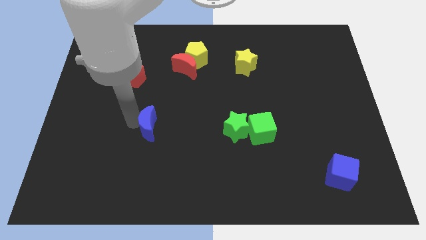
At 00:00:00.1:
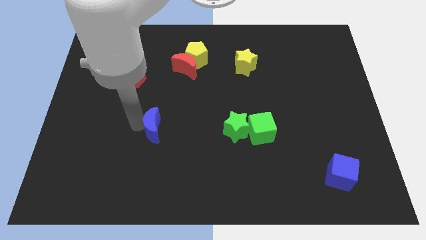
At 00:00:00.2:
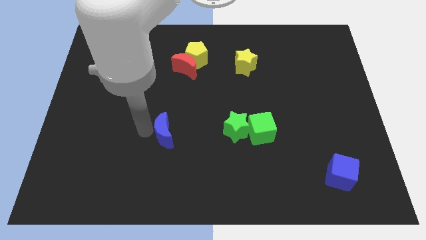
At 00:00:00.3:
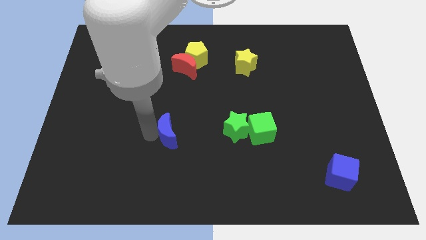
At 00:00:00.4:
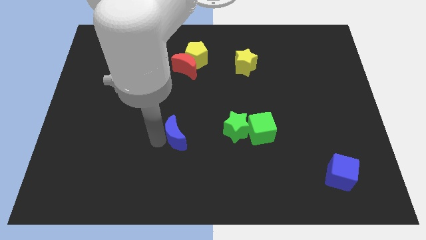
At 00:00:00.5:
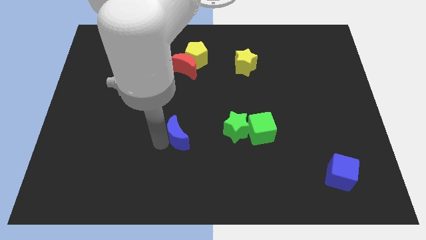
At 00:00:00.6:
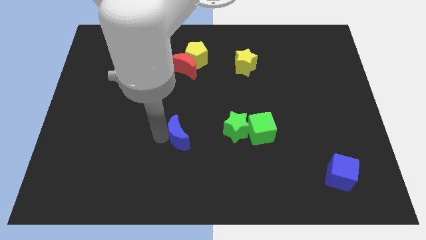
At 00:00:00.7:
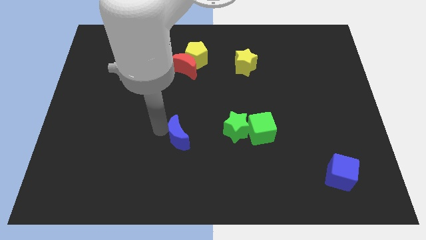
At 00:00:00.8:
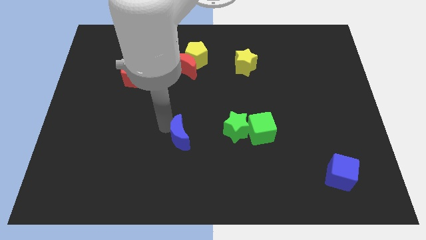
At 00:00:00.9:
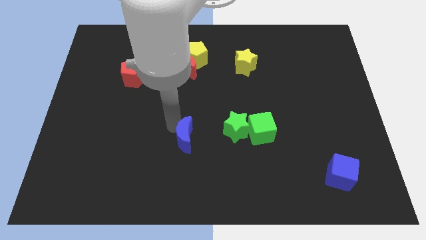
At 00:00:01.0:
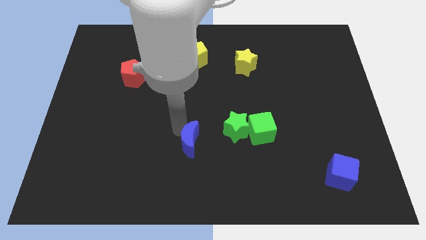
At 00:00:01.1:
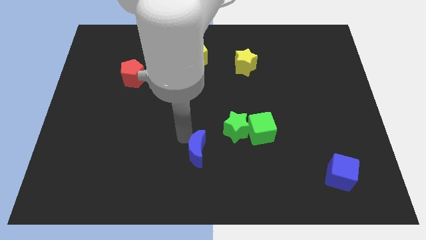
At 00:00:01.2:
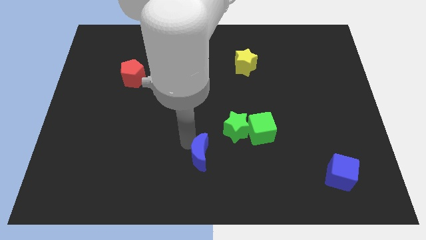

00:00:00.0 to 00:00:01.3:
place blue moon to the bottom left of green star

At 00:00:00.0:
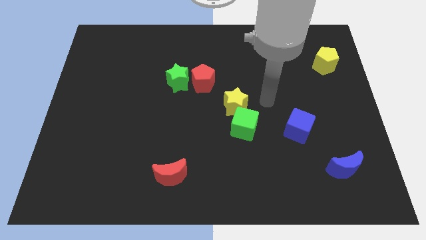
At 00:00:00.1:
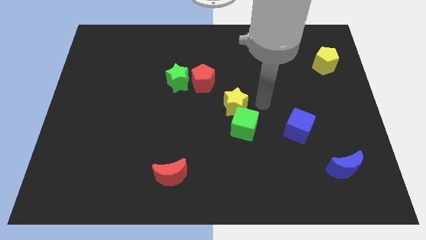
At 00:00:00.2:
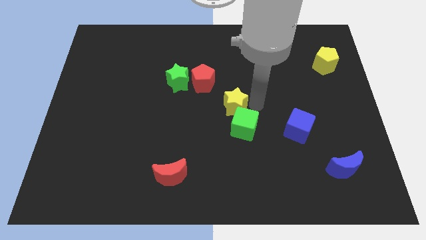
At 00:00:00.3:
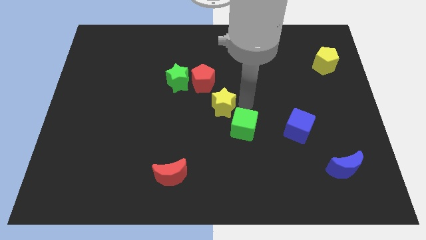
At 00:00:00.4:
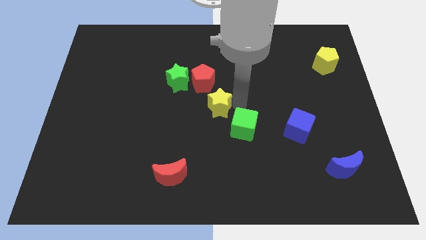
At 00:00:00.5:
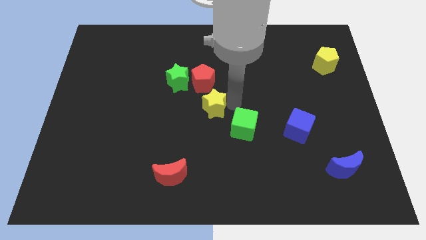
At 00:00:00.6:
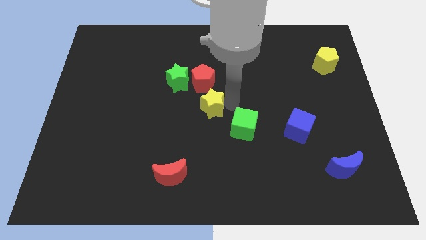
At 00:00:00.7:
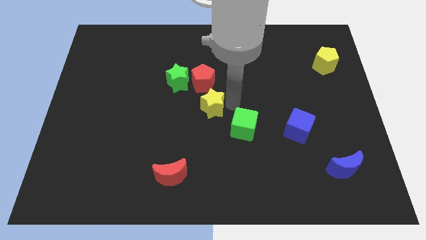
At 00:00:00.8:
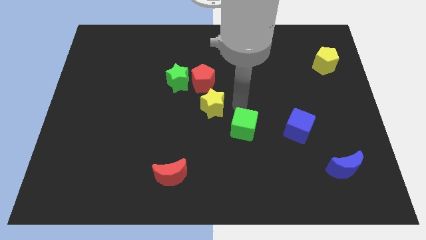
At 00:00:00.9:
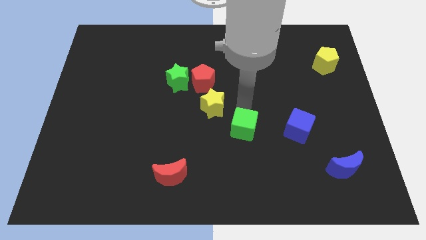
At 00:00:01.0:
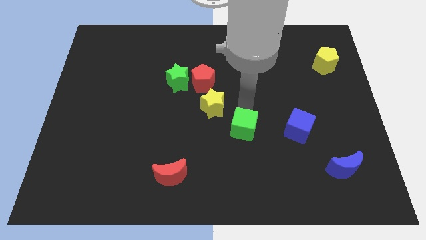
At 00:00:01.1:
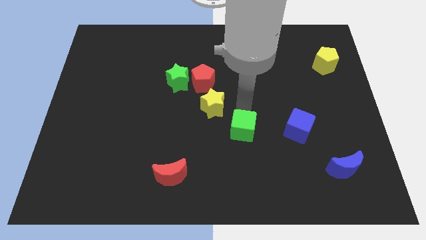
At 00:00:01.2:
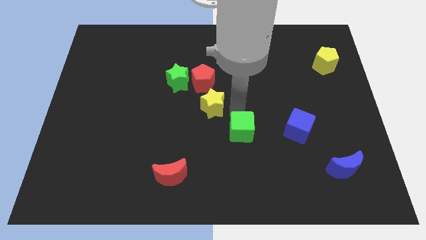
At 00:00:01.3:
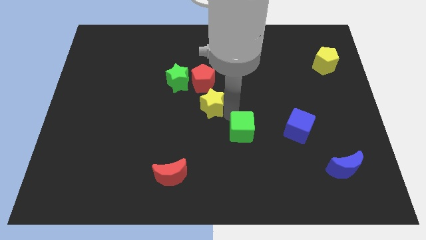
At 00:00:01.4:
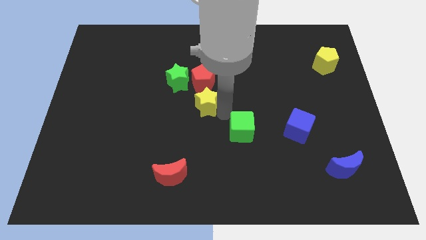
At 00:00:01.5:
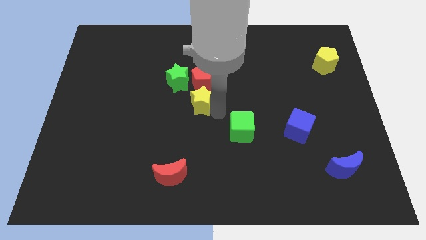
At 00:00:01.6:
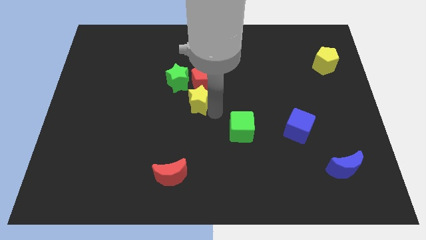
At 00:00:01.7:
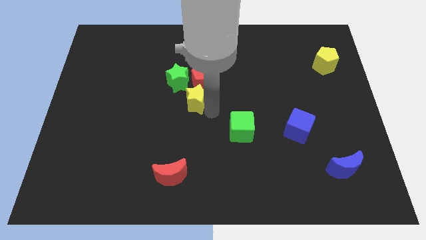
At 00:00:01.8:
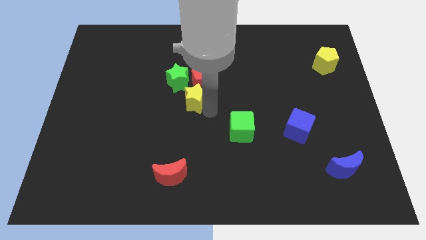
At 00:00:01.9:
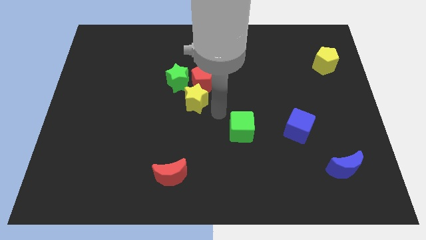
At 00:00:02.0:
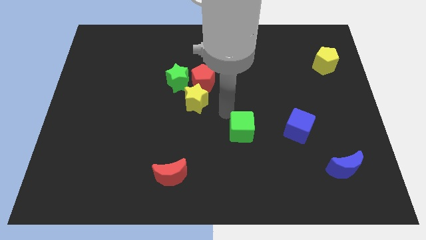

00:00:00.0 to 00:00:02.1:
move the yellow star to the left

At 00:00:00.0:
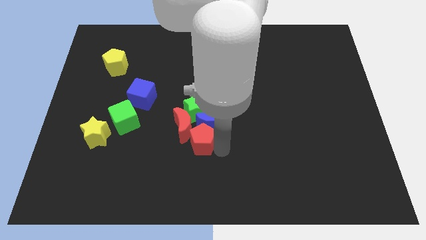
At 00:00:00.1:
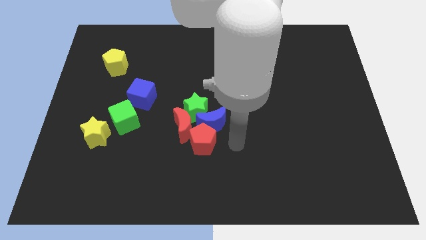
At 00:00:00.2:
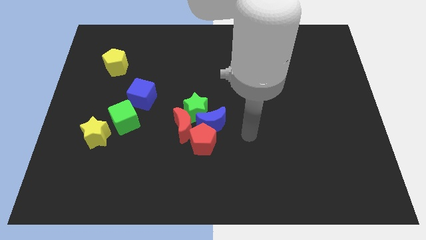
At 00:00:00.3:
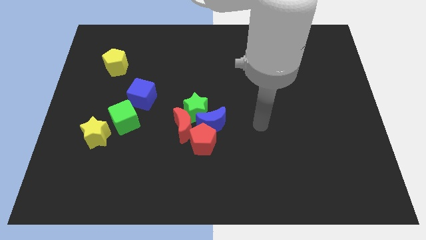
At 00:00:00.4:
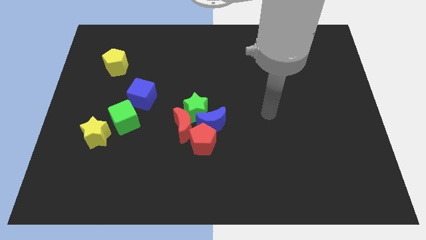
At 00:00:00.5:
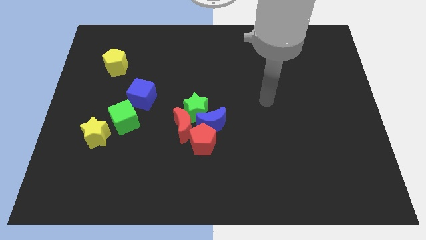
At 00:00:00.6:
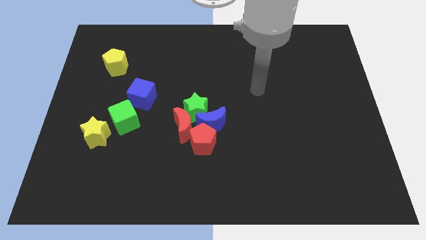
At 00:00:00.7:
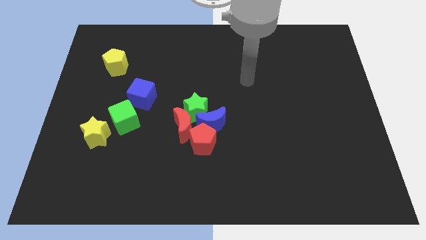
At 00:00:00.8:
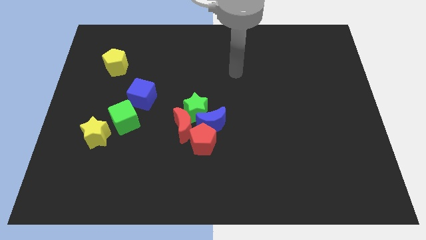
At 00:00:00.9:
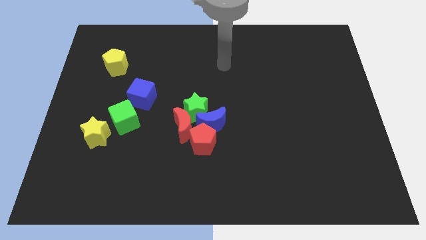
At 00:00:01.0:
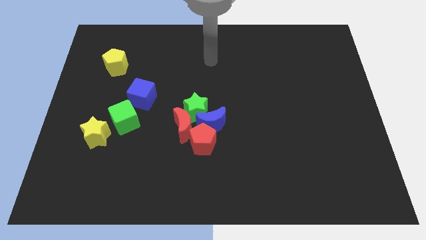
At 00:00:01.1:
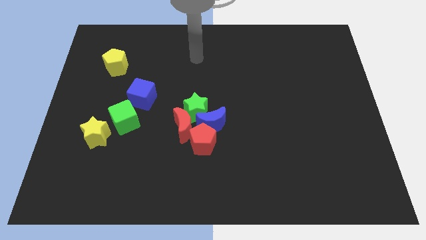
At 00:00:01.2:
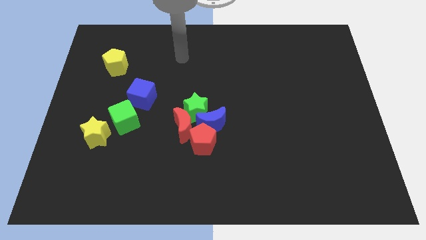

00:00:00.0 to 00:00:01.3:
move yourself towards the top side of the board

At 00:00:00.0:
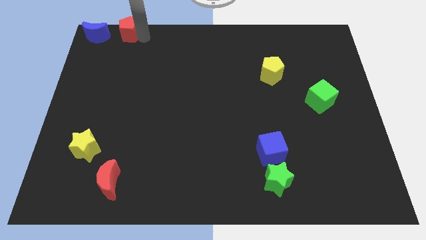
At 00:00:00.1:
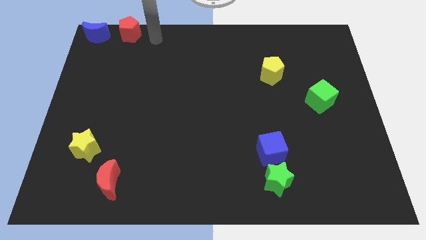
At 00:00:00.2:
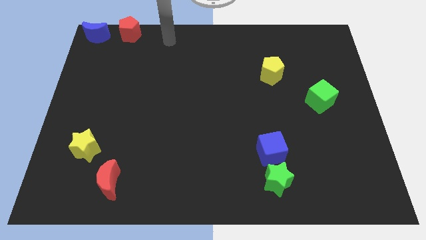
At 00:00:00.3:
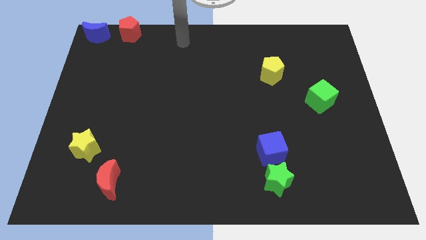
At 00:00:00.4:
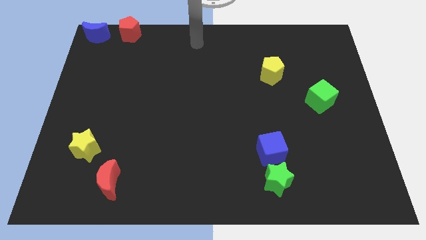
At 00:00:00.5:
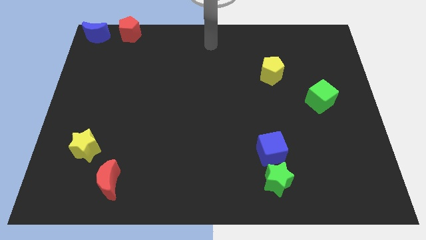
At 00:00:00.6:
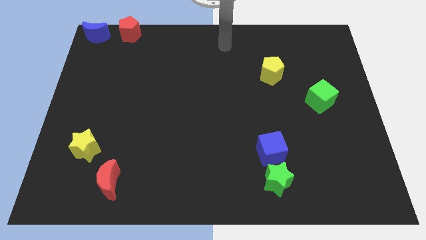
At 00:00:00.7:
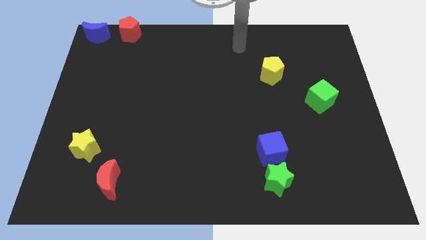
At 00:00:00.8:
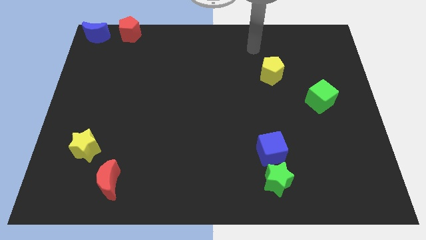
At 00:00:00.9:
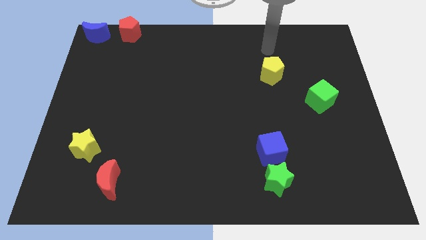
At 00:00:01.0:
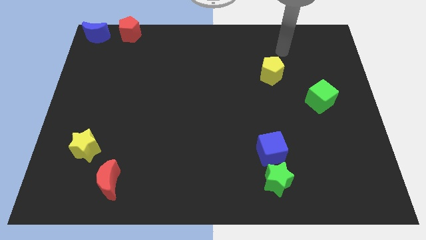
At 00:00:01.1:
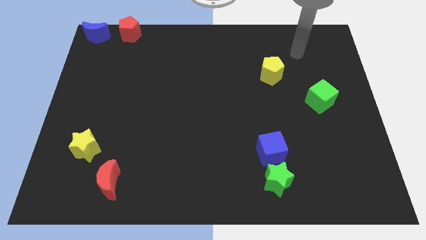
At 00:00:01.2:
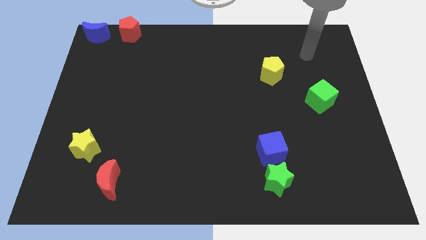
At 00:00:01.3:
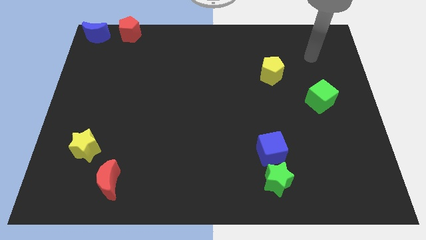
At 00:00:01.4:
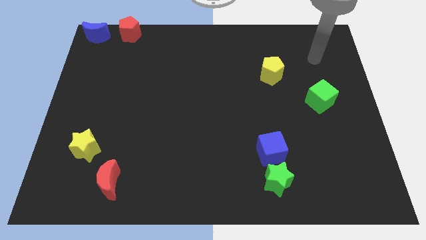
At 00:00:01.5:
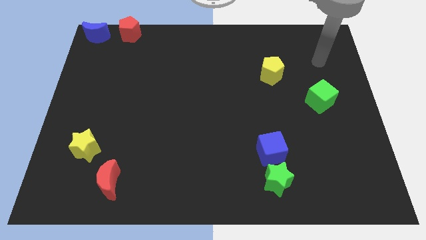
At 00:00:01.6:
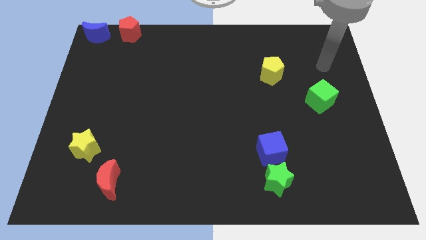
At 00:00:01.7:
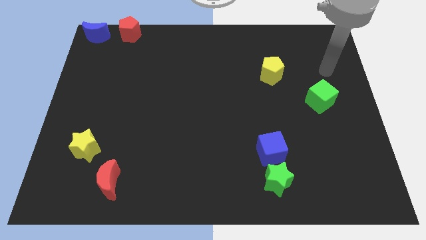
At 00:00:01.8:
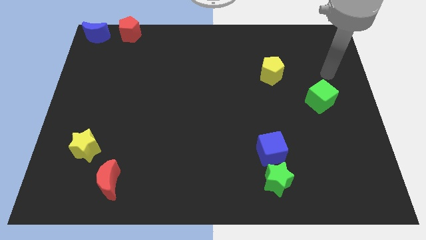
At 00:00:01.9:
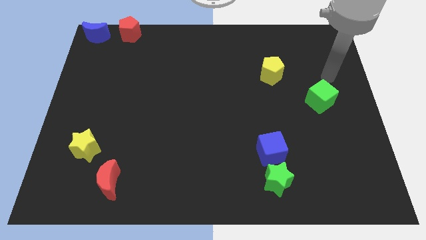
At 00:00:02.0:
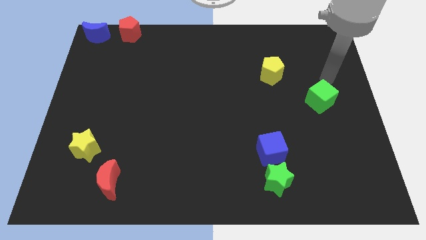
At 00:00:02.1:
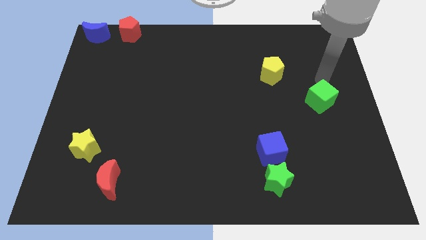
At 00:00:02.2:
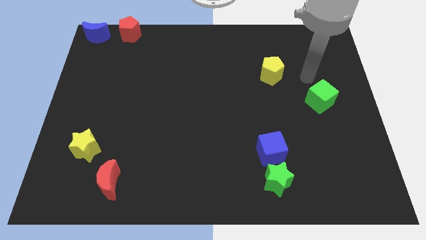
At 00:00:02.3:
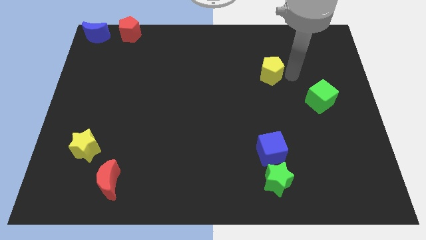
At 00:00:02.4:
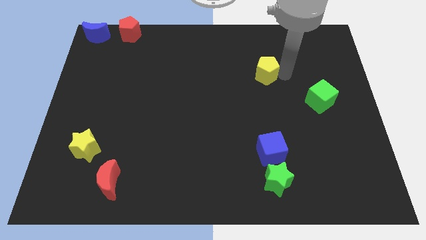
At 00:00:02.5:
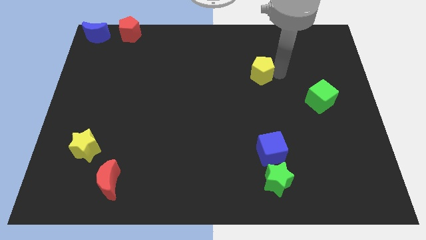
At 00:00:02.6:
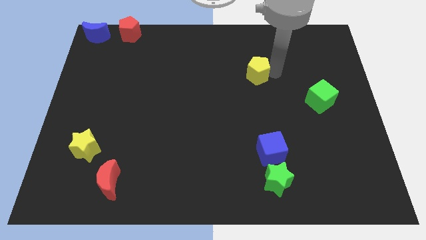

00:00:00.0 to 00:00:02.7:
move your arm away from the red pentagon

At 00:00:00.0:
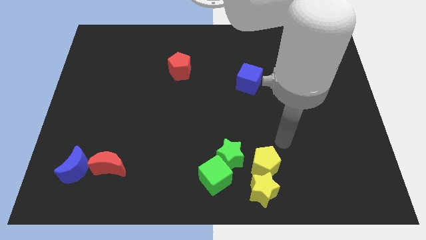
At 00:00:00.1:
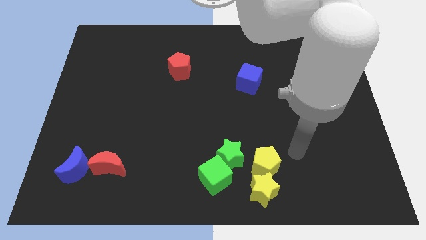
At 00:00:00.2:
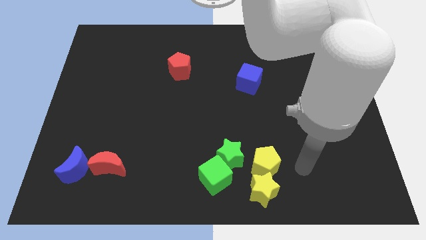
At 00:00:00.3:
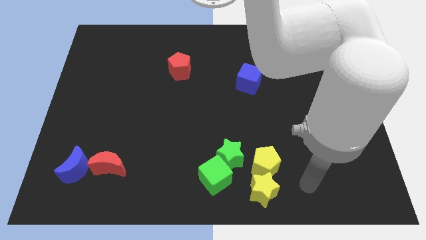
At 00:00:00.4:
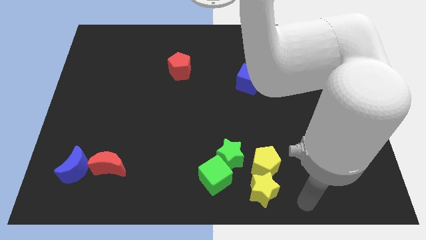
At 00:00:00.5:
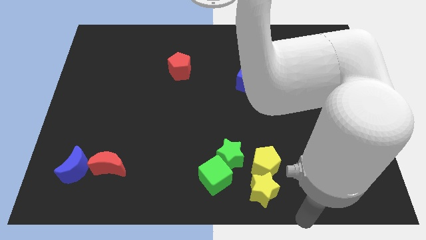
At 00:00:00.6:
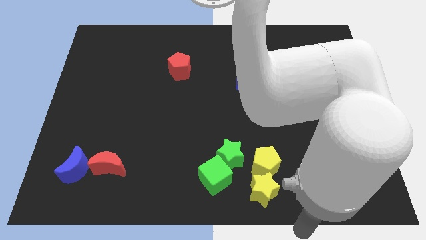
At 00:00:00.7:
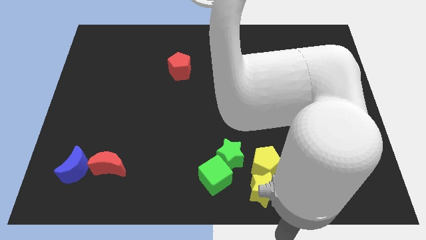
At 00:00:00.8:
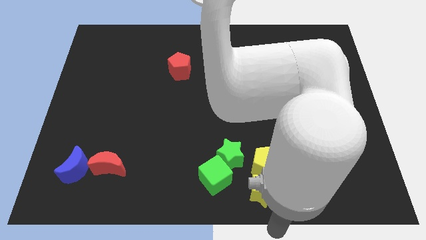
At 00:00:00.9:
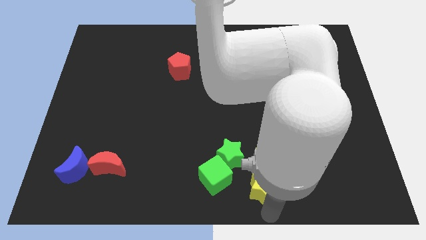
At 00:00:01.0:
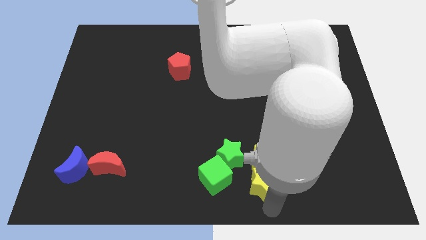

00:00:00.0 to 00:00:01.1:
place the arm down to the yellow star

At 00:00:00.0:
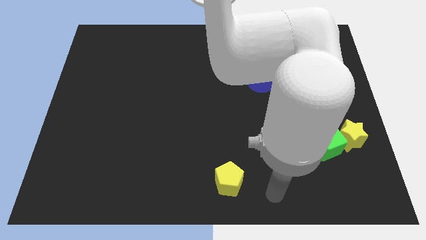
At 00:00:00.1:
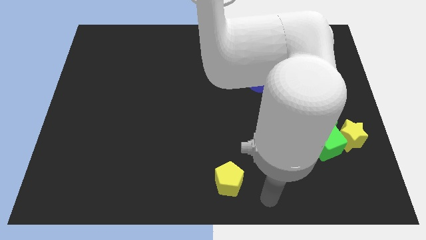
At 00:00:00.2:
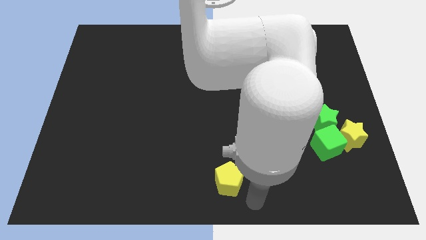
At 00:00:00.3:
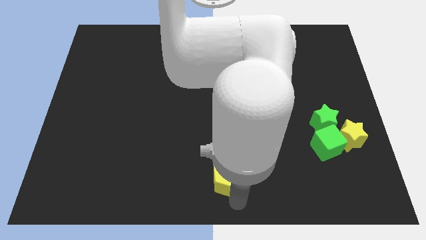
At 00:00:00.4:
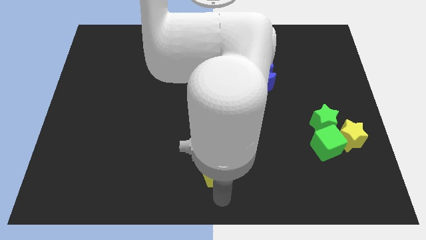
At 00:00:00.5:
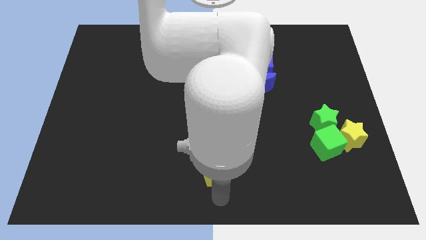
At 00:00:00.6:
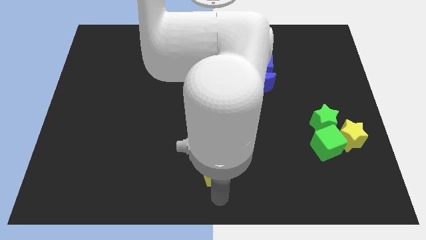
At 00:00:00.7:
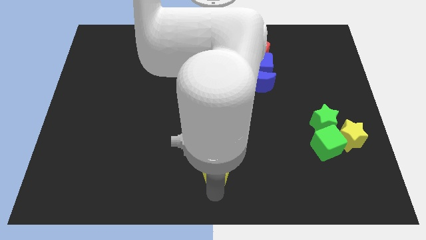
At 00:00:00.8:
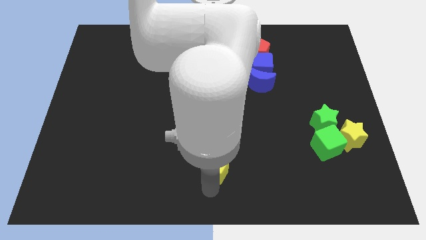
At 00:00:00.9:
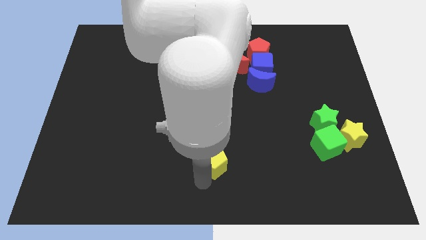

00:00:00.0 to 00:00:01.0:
move the yellow pentagon slightly to the top side
